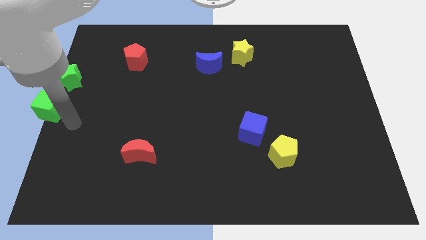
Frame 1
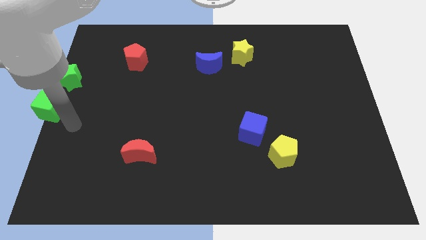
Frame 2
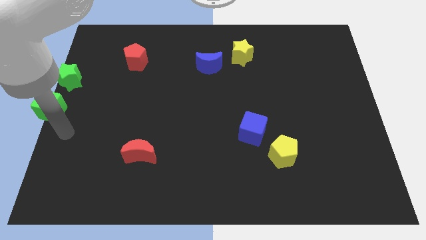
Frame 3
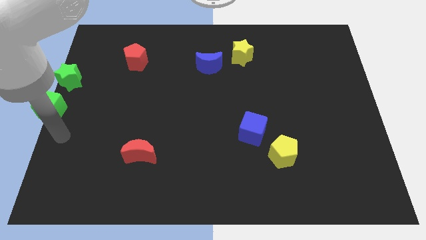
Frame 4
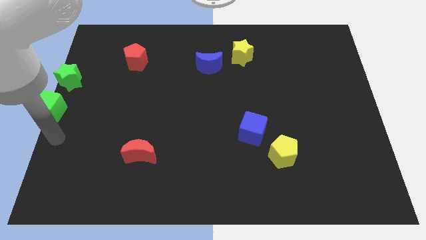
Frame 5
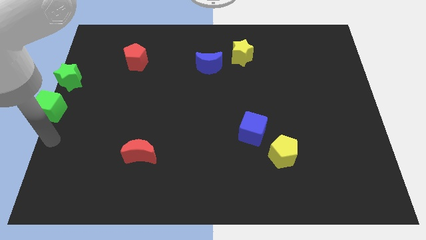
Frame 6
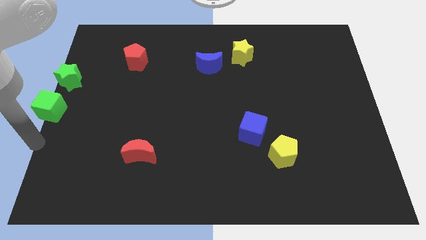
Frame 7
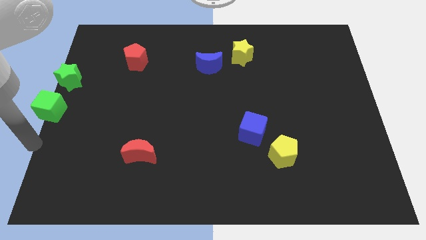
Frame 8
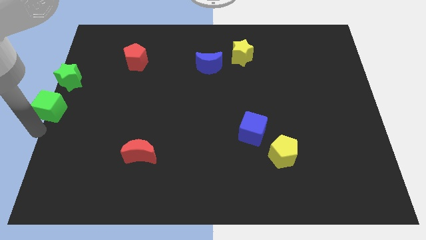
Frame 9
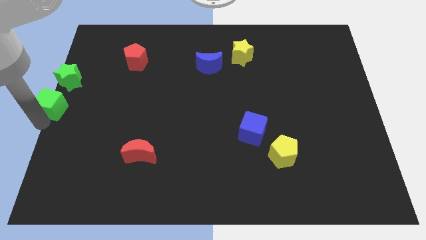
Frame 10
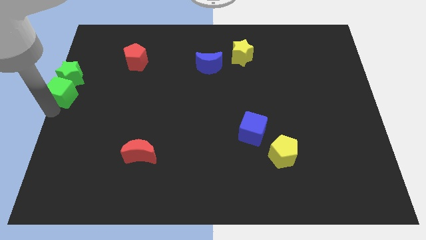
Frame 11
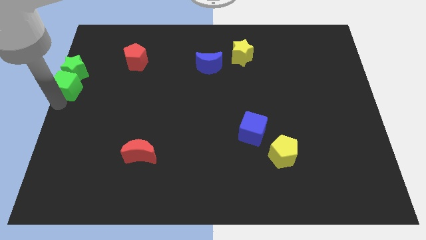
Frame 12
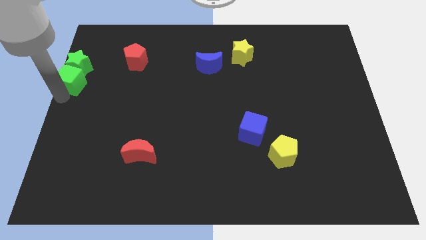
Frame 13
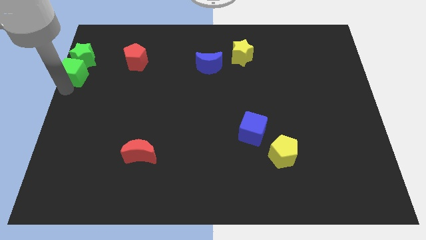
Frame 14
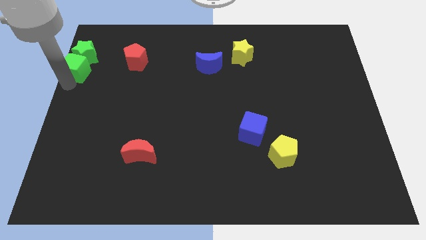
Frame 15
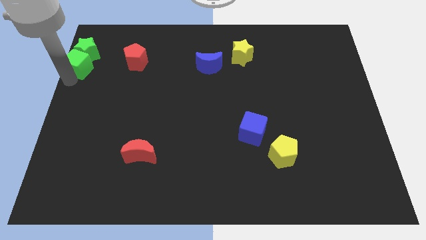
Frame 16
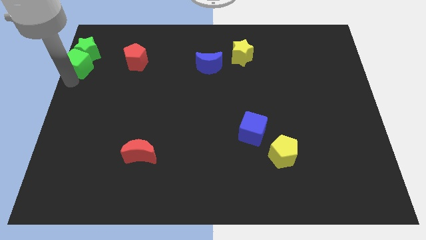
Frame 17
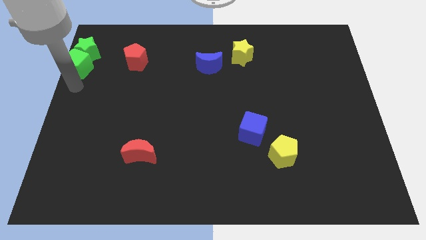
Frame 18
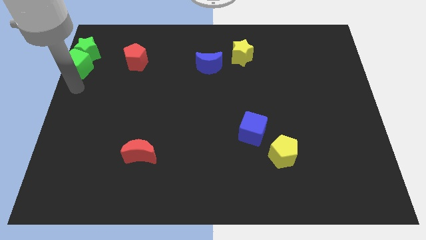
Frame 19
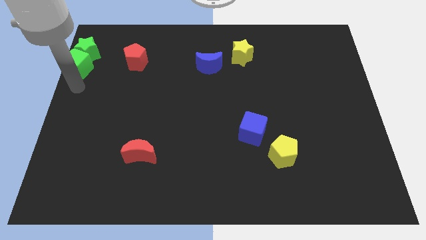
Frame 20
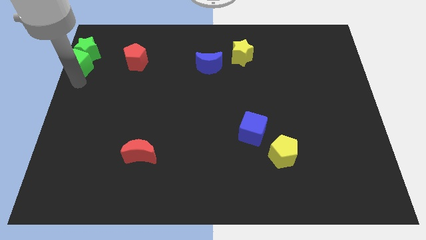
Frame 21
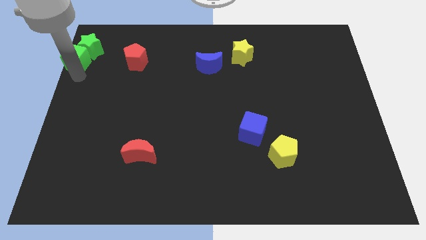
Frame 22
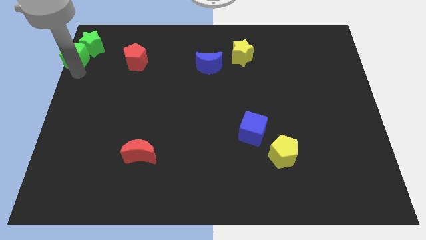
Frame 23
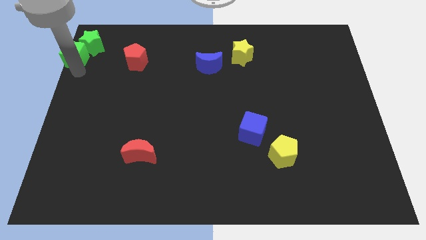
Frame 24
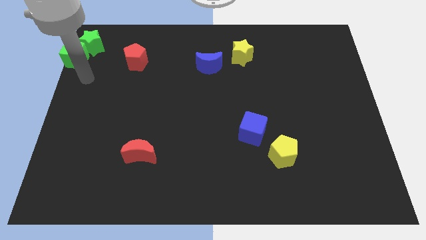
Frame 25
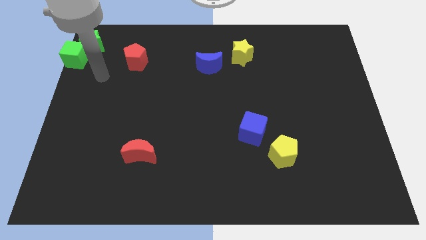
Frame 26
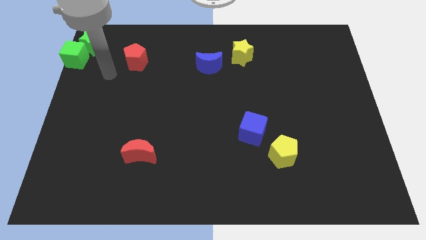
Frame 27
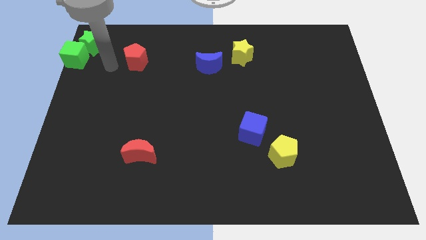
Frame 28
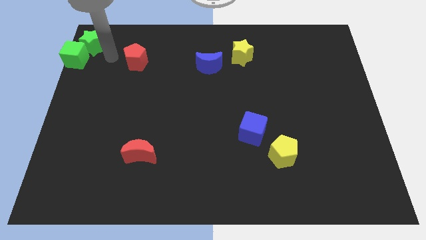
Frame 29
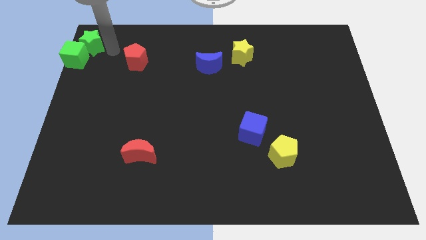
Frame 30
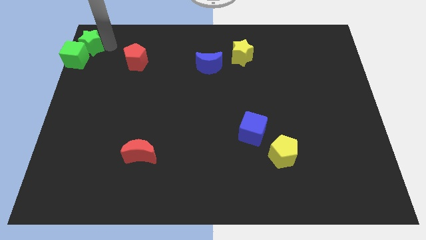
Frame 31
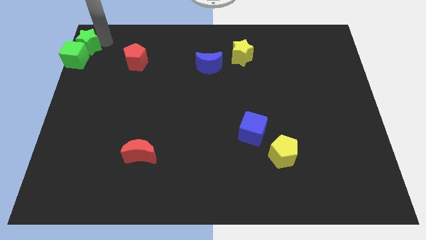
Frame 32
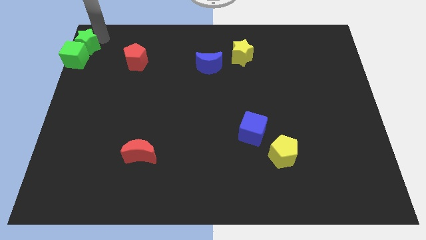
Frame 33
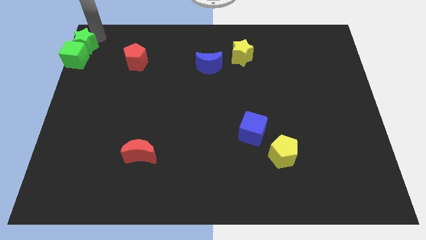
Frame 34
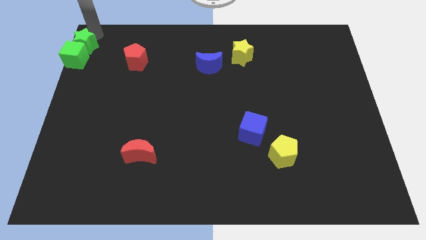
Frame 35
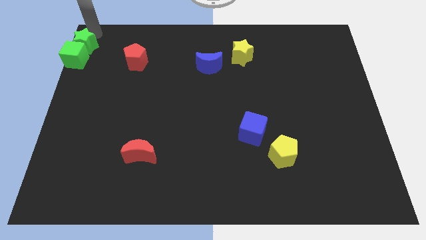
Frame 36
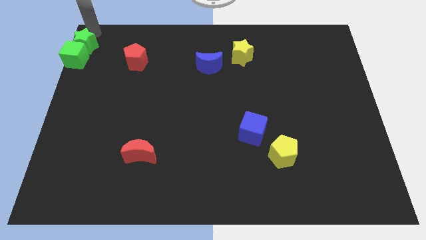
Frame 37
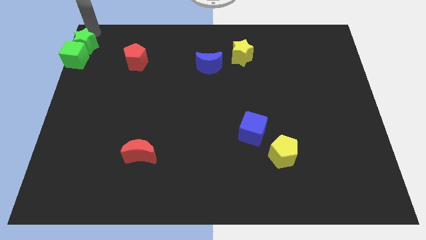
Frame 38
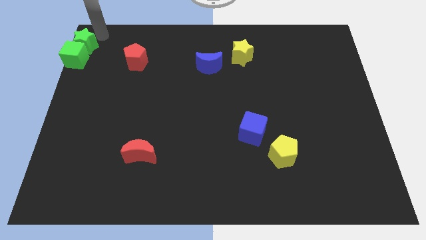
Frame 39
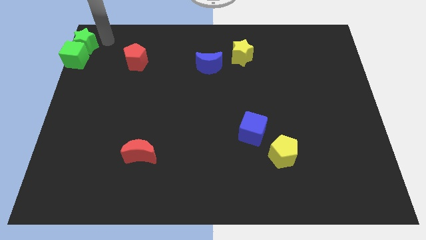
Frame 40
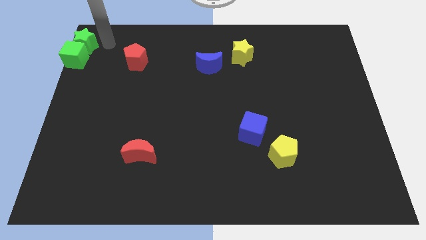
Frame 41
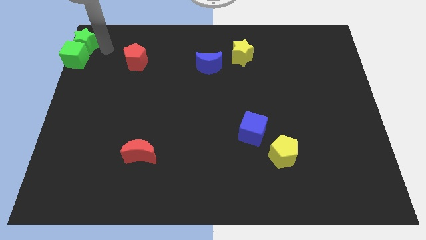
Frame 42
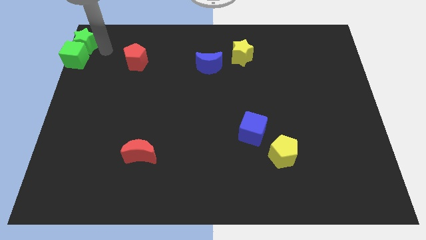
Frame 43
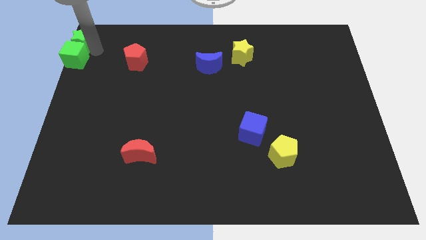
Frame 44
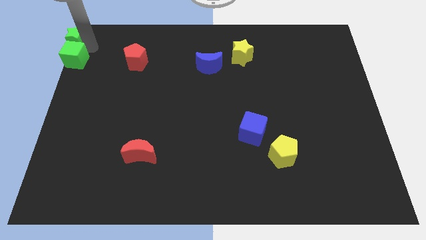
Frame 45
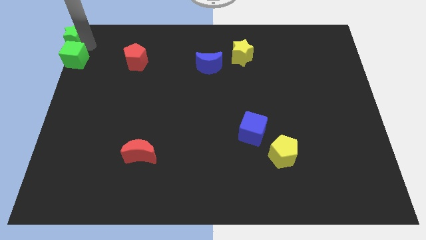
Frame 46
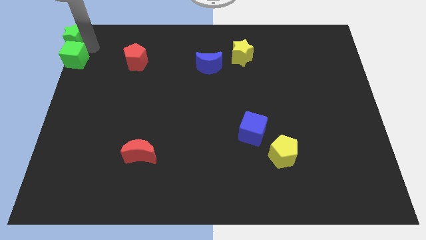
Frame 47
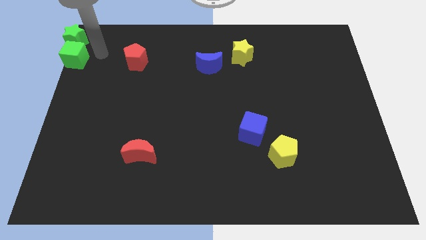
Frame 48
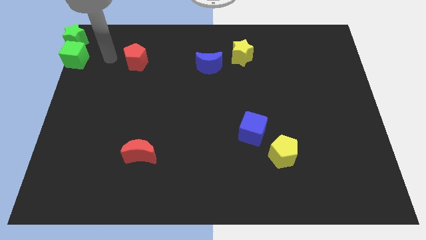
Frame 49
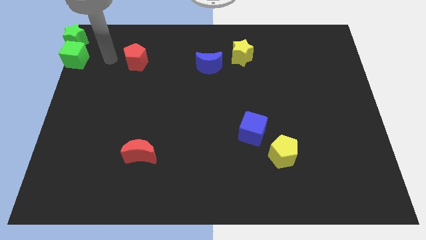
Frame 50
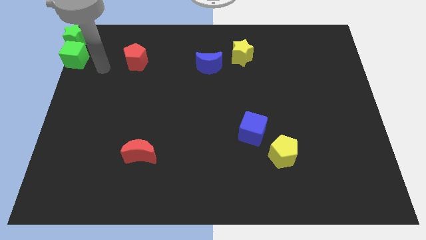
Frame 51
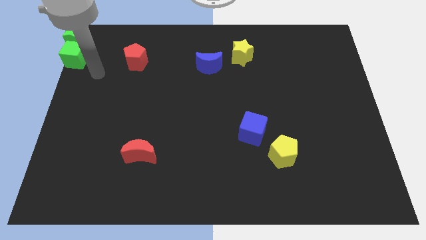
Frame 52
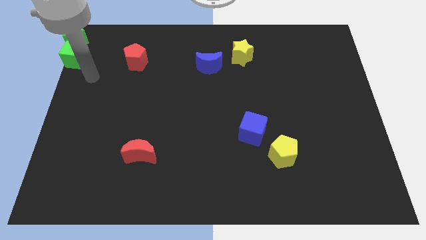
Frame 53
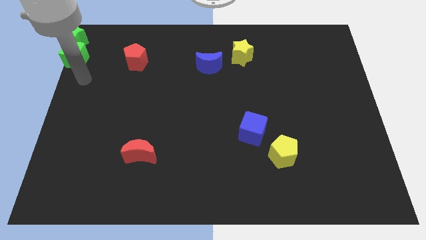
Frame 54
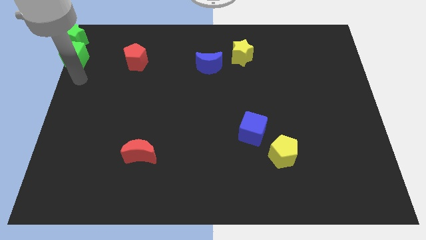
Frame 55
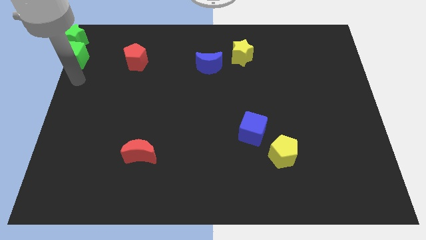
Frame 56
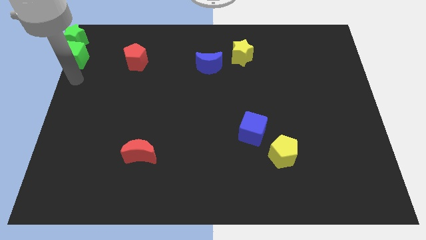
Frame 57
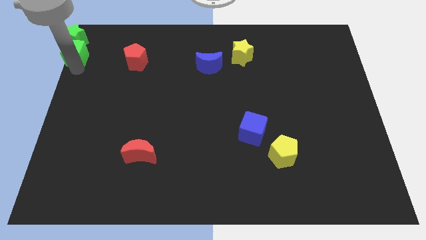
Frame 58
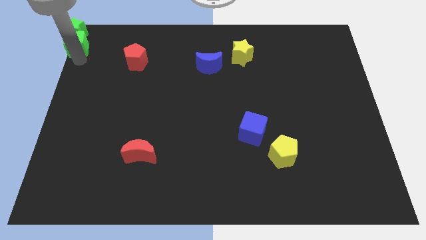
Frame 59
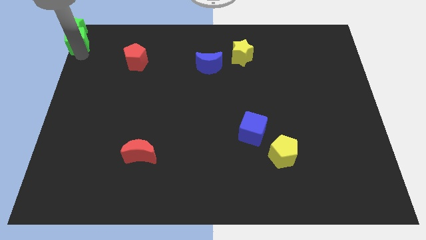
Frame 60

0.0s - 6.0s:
drag the green blocks to top left corner of the board

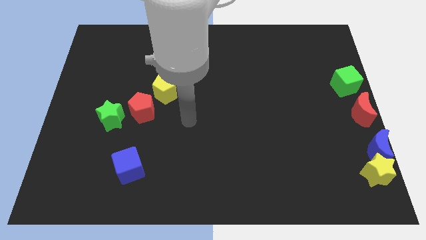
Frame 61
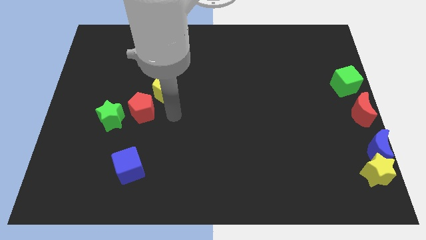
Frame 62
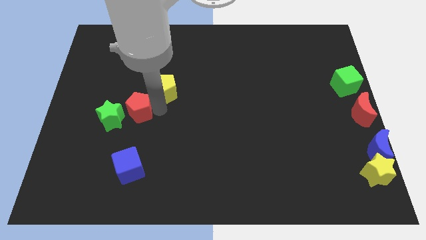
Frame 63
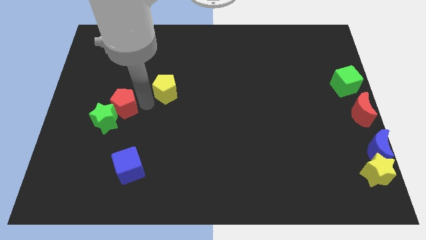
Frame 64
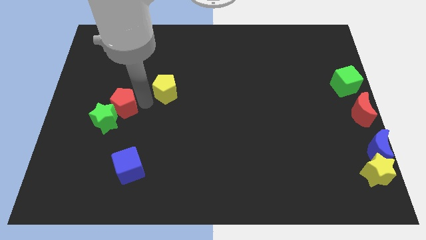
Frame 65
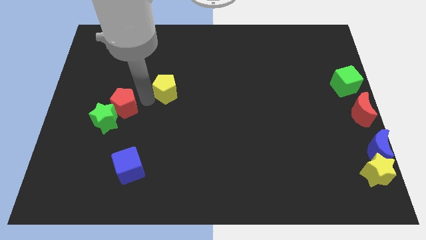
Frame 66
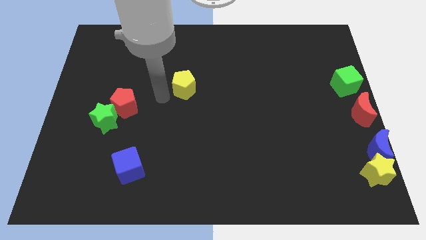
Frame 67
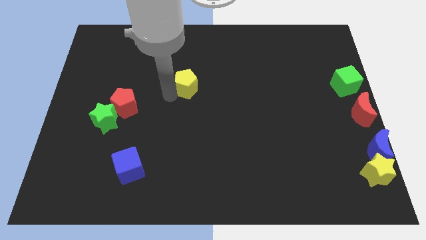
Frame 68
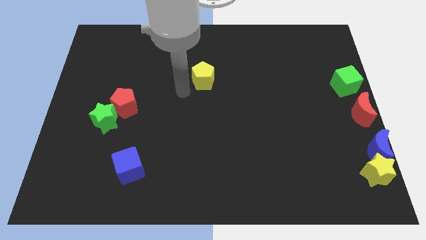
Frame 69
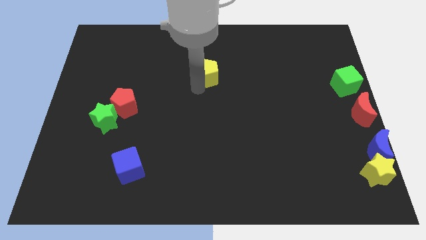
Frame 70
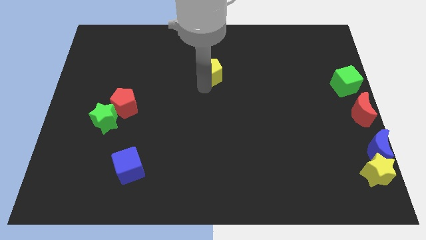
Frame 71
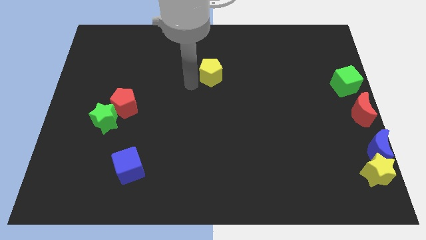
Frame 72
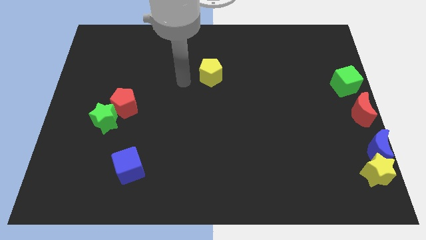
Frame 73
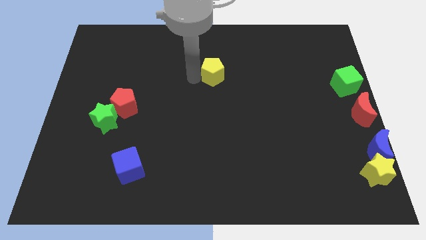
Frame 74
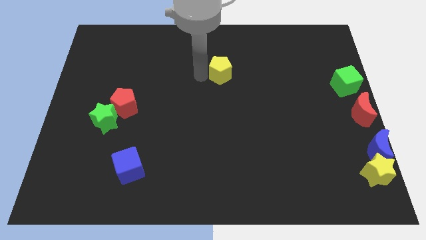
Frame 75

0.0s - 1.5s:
move yellow pentagon away from the red pentagon

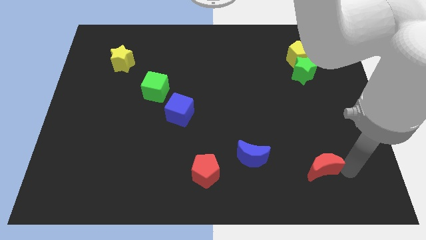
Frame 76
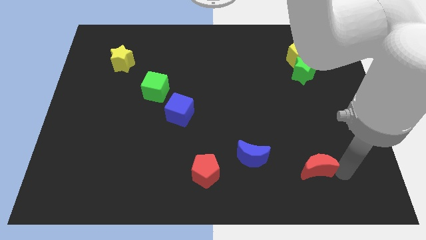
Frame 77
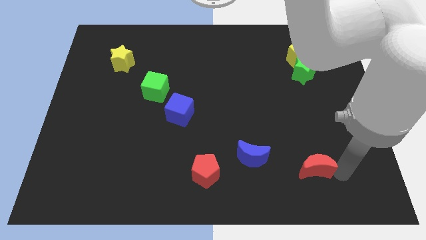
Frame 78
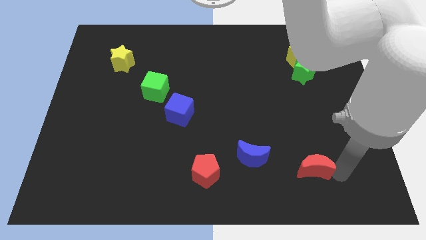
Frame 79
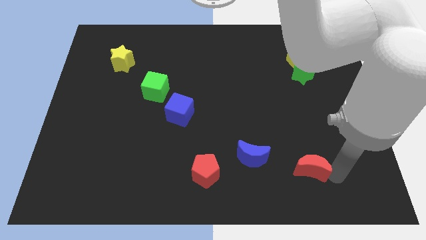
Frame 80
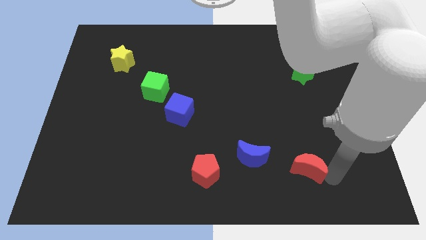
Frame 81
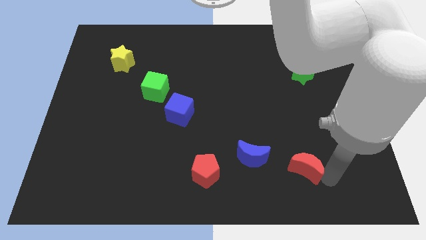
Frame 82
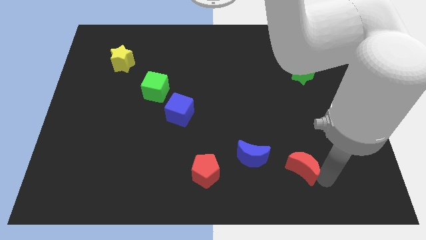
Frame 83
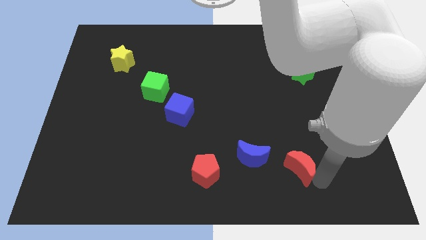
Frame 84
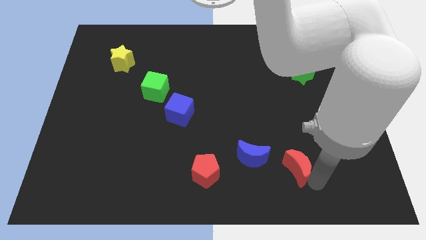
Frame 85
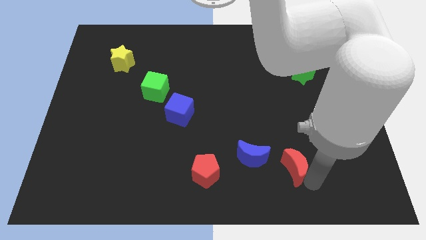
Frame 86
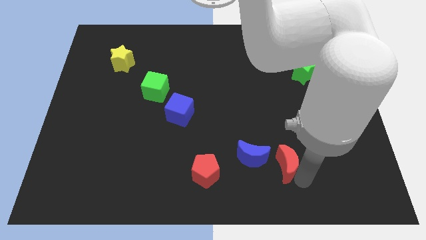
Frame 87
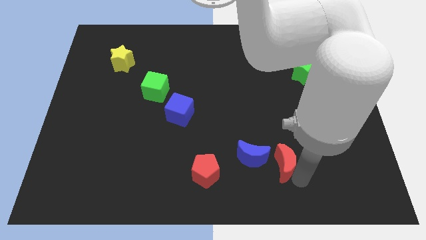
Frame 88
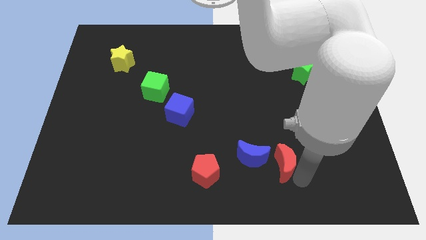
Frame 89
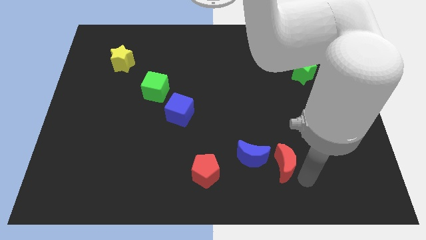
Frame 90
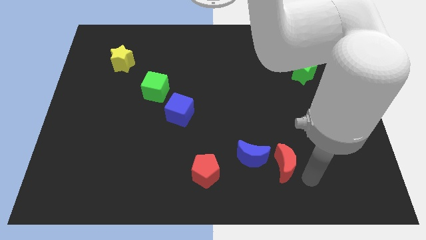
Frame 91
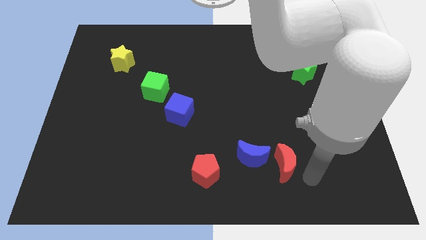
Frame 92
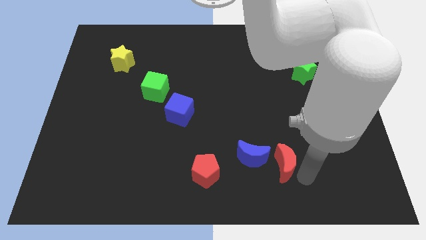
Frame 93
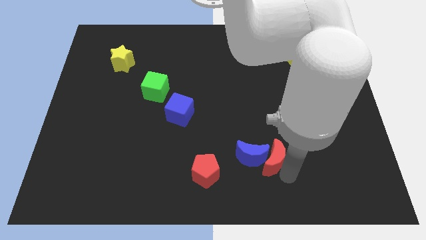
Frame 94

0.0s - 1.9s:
push the red crescent close to blue crescent
